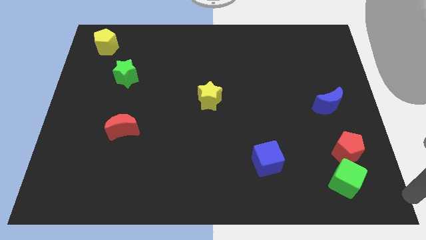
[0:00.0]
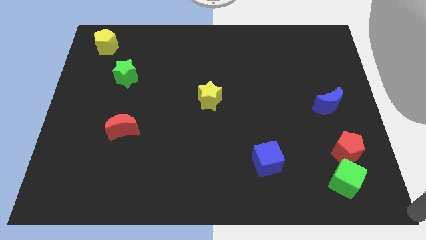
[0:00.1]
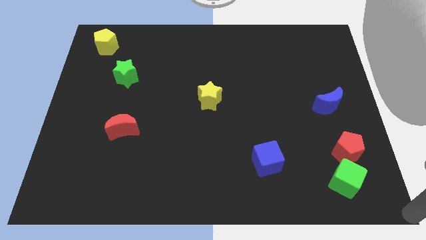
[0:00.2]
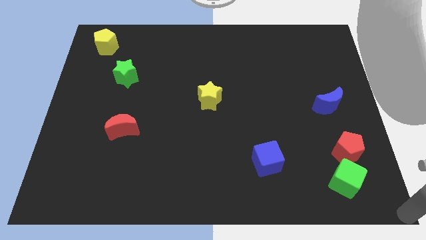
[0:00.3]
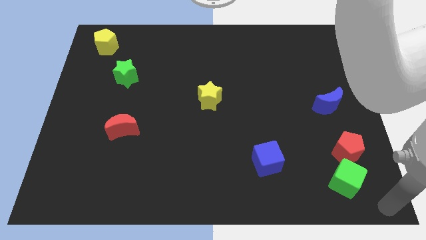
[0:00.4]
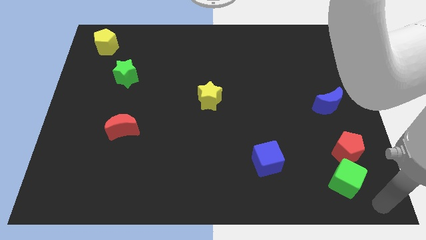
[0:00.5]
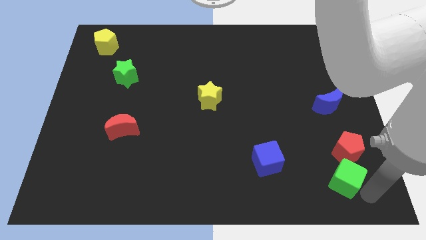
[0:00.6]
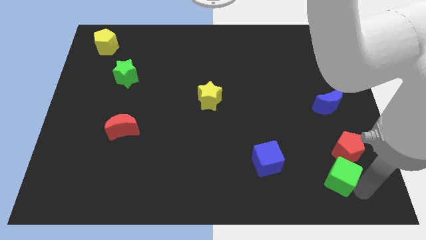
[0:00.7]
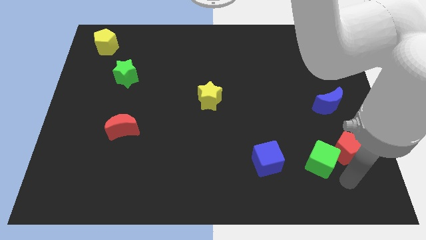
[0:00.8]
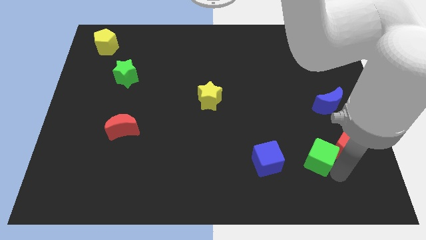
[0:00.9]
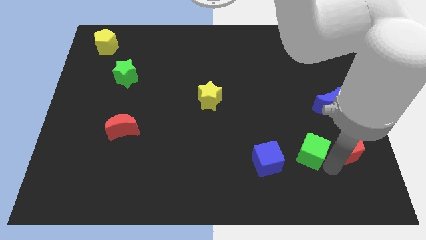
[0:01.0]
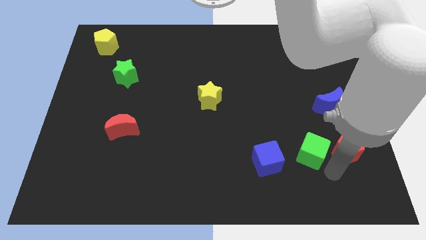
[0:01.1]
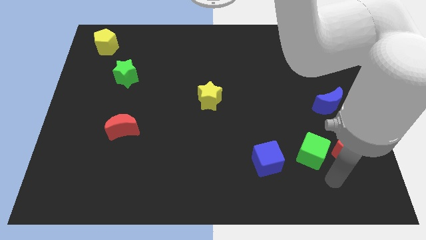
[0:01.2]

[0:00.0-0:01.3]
move the green cube to the right of the blue cube

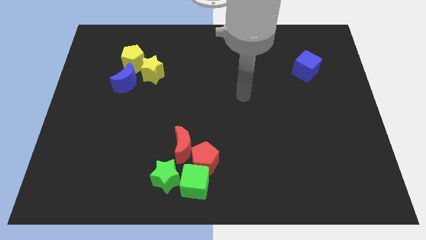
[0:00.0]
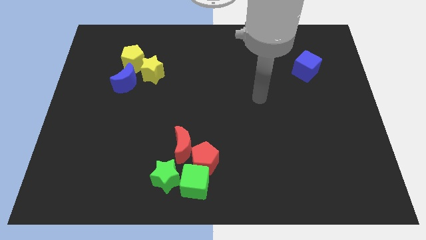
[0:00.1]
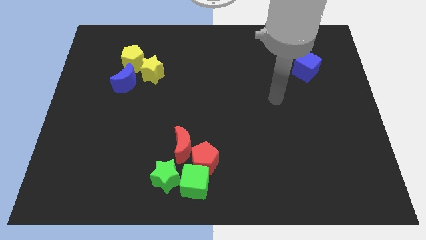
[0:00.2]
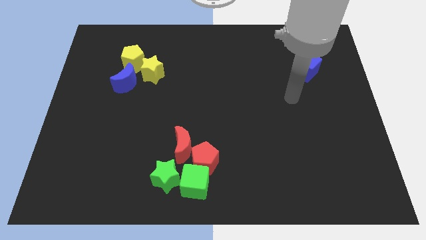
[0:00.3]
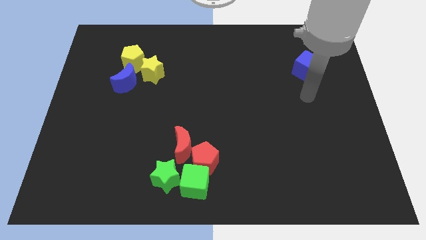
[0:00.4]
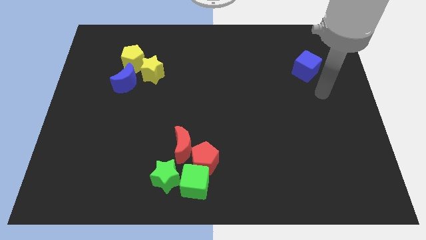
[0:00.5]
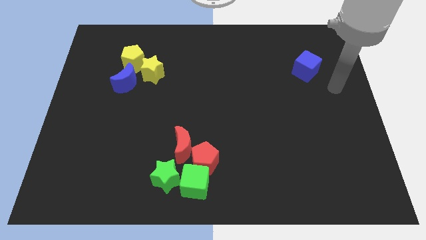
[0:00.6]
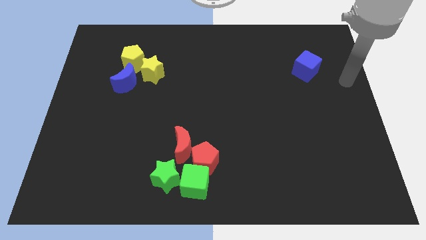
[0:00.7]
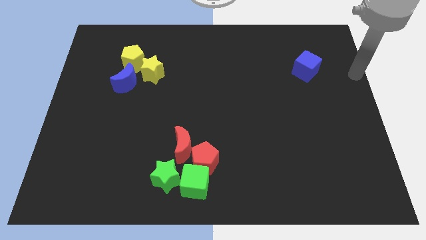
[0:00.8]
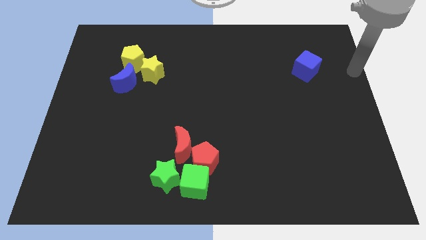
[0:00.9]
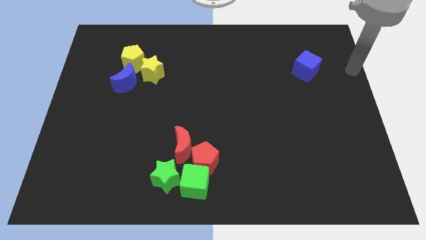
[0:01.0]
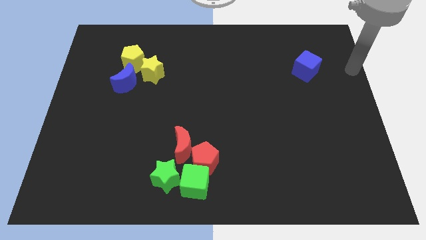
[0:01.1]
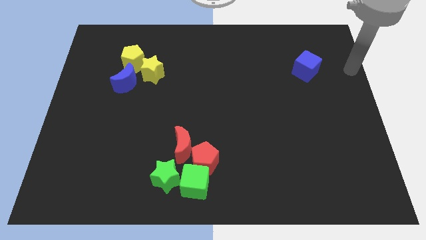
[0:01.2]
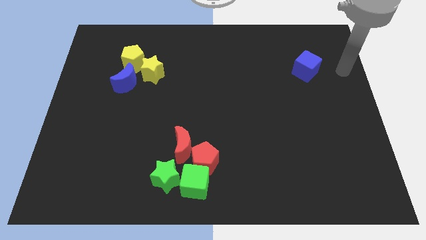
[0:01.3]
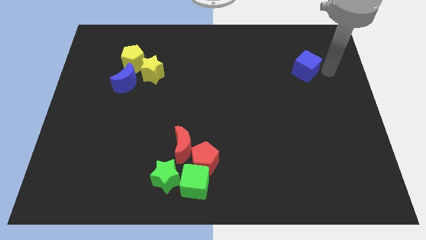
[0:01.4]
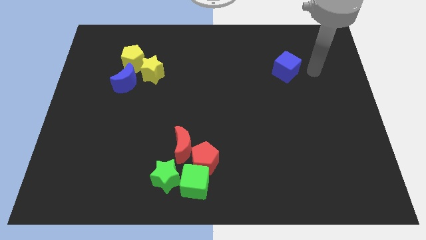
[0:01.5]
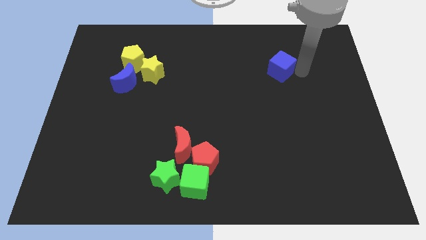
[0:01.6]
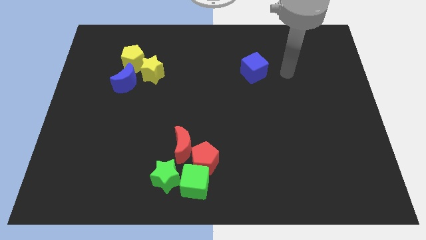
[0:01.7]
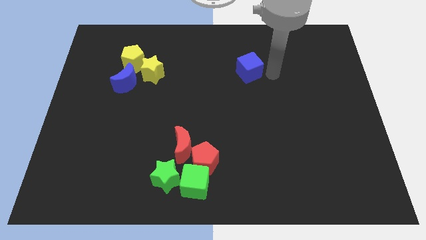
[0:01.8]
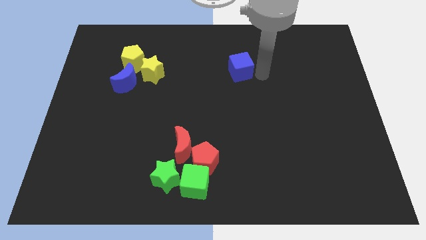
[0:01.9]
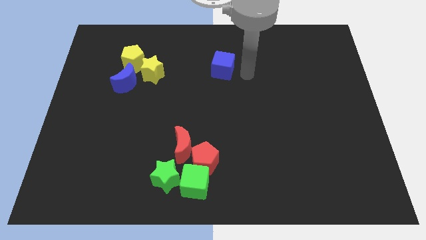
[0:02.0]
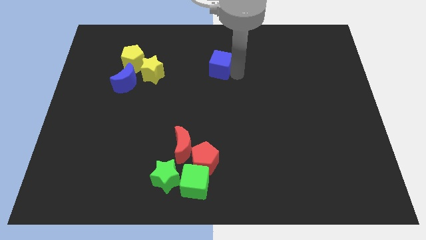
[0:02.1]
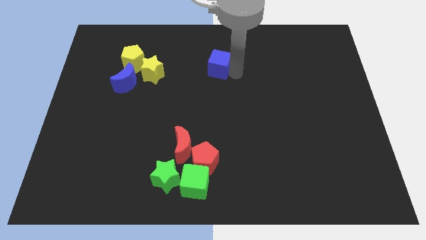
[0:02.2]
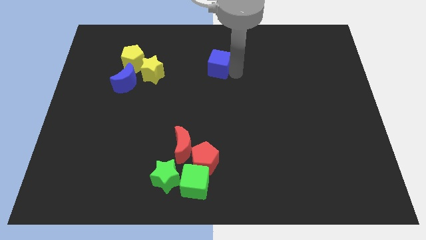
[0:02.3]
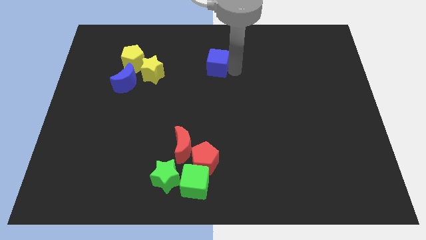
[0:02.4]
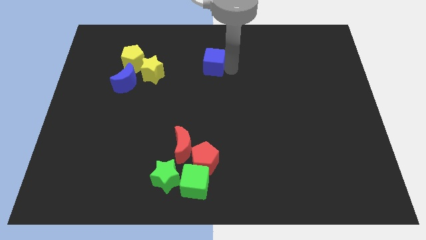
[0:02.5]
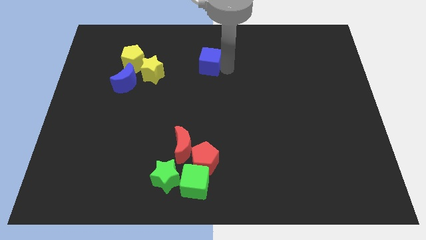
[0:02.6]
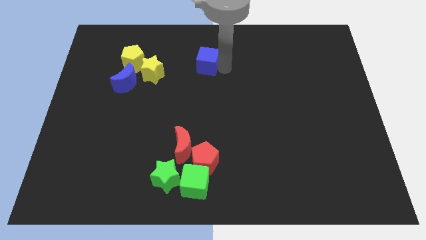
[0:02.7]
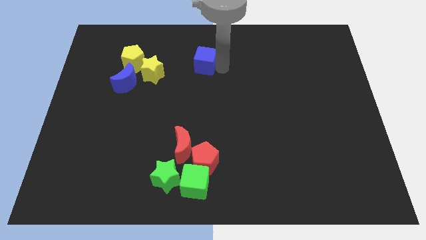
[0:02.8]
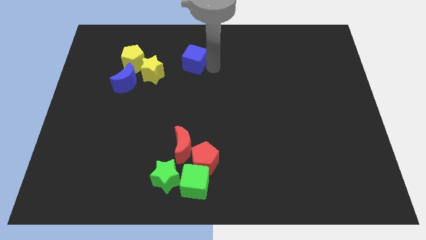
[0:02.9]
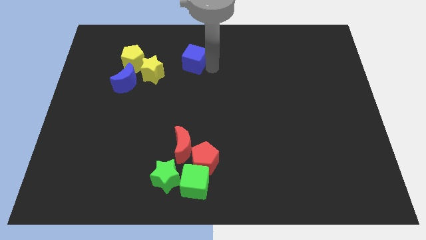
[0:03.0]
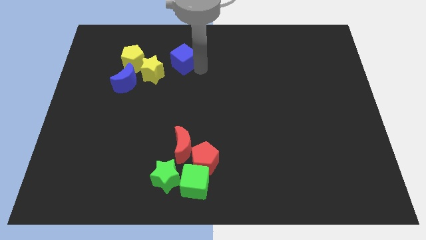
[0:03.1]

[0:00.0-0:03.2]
place blue cube to the right of yellow pentagon

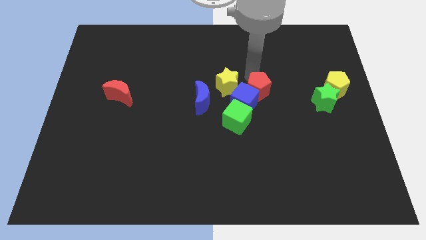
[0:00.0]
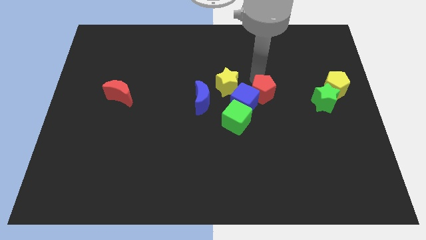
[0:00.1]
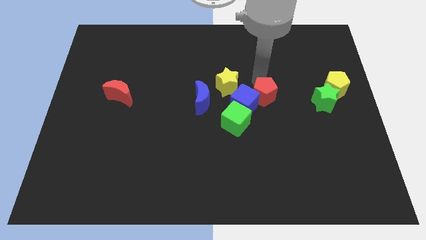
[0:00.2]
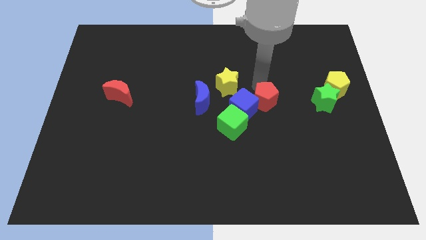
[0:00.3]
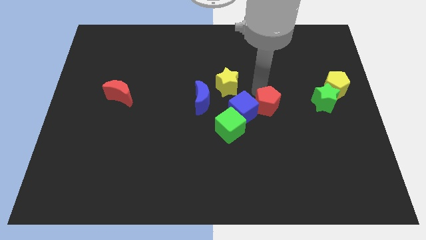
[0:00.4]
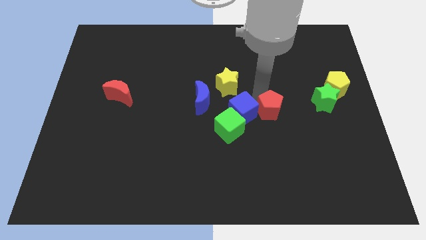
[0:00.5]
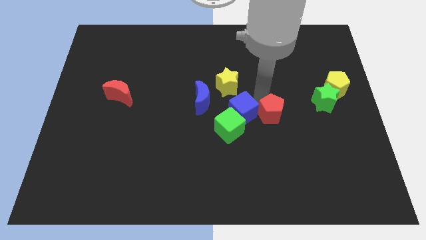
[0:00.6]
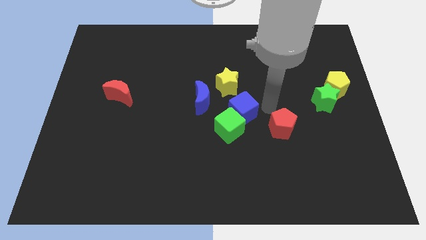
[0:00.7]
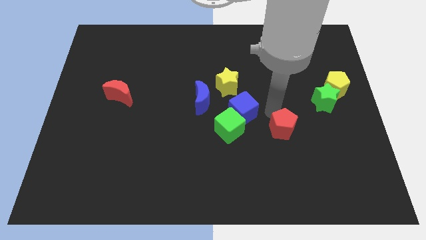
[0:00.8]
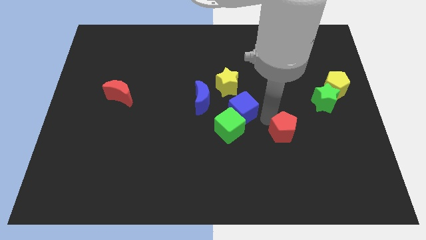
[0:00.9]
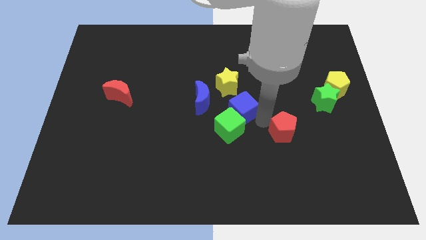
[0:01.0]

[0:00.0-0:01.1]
separate the red pentagon from the blue cube

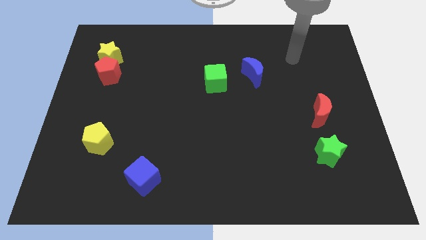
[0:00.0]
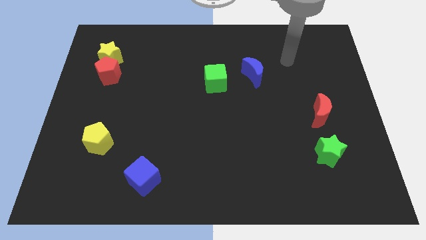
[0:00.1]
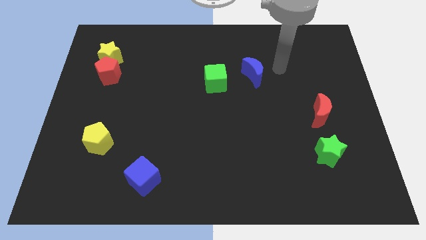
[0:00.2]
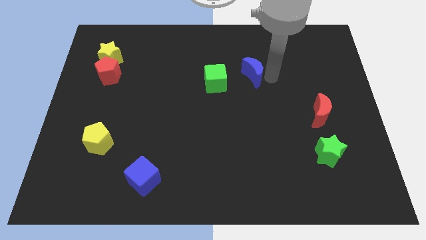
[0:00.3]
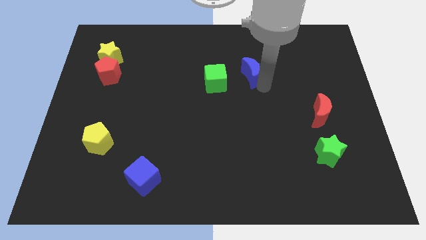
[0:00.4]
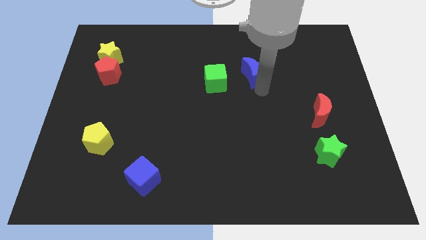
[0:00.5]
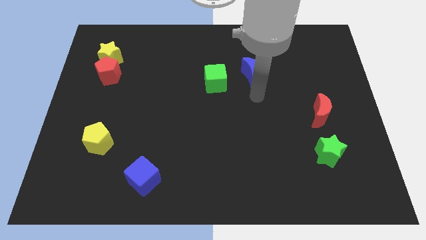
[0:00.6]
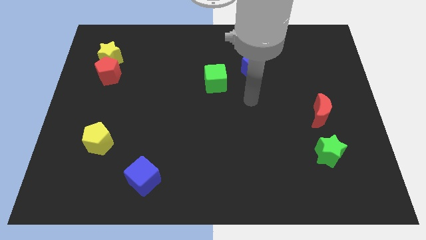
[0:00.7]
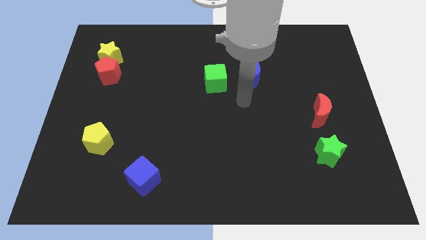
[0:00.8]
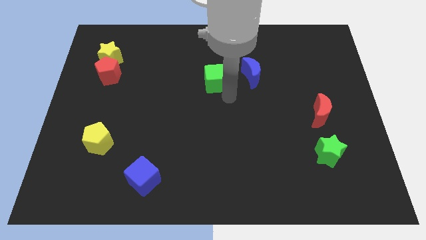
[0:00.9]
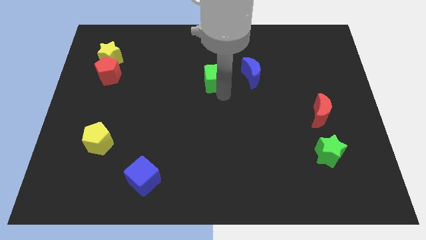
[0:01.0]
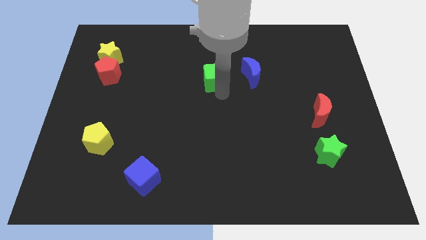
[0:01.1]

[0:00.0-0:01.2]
slightly tap on the blue crescent

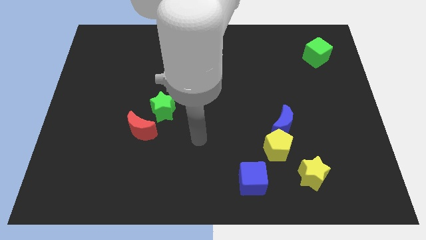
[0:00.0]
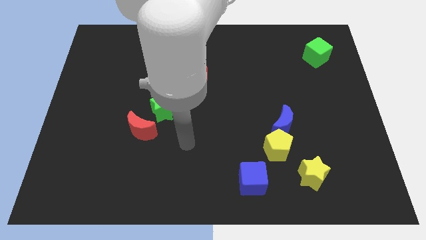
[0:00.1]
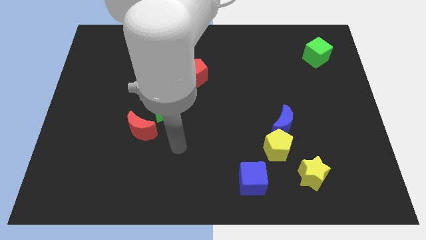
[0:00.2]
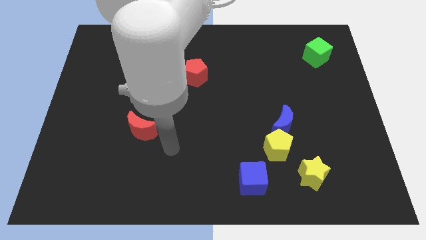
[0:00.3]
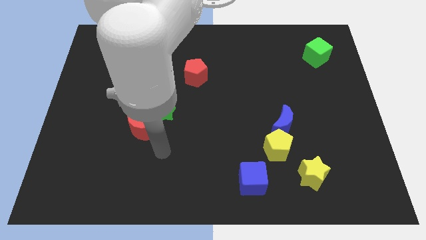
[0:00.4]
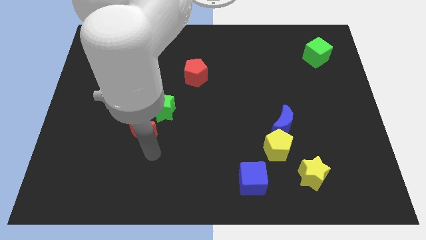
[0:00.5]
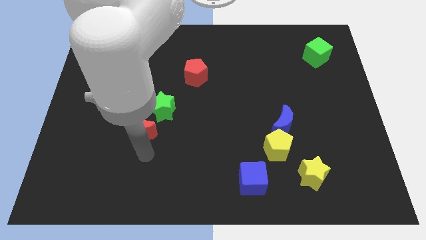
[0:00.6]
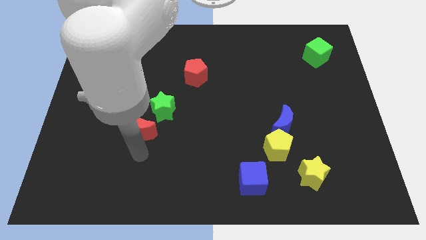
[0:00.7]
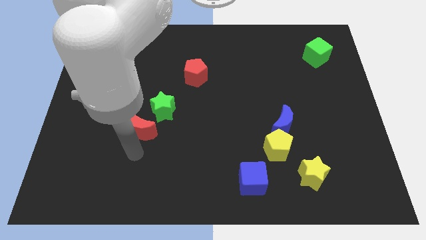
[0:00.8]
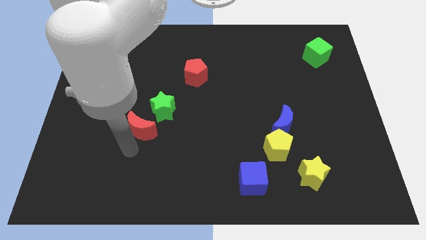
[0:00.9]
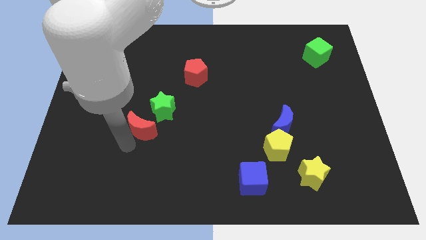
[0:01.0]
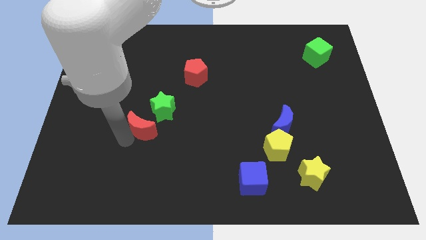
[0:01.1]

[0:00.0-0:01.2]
move the arm to the bottom of the red pentagon

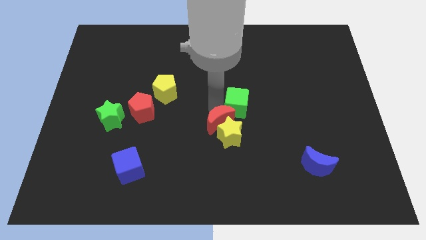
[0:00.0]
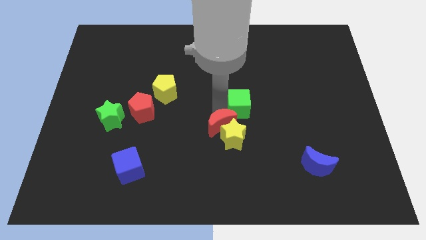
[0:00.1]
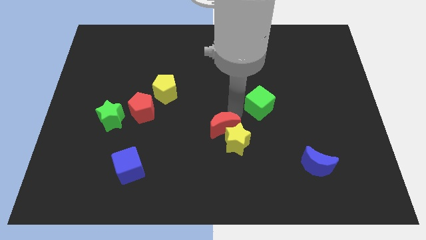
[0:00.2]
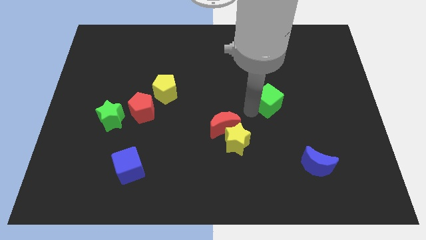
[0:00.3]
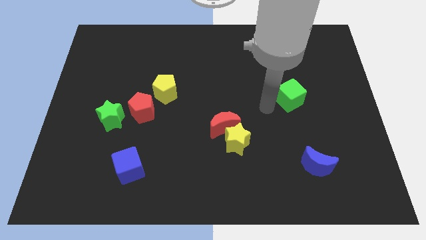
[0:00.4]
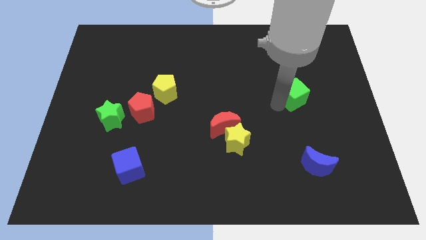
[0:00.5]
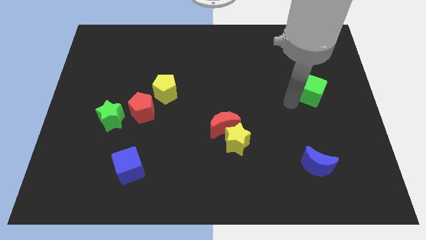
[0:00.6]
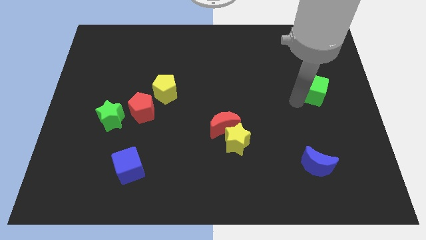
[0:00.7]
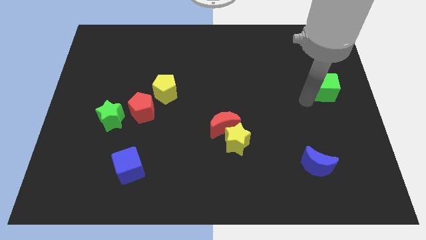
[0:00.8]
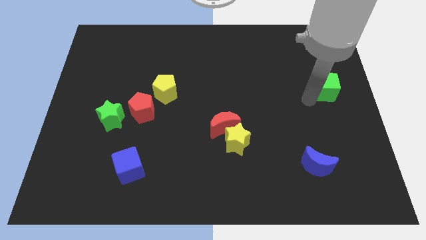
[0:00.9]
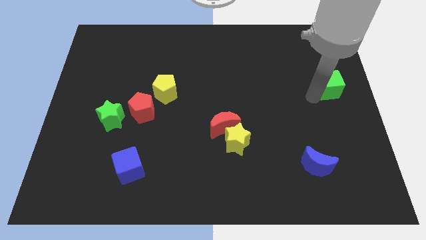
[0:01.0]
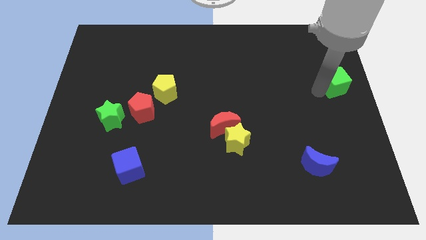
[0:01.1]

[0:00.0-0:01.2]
move the green cube away from the red crescent
